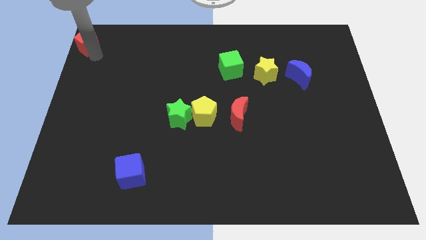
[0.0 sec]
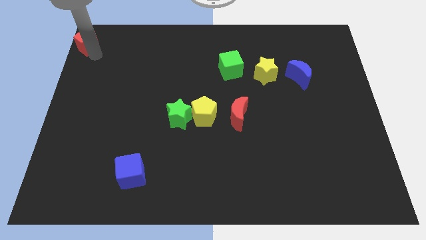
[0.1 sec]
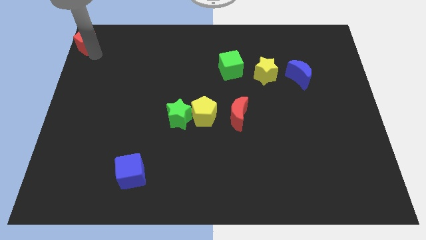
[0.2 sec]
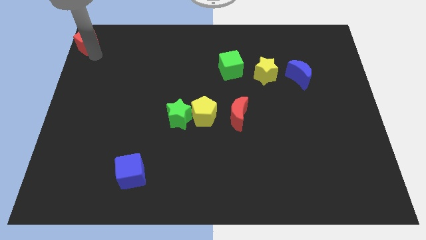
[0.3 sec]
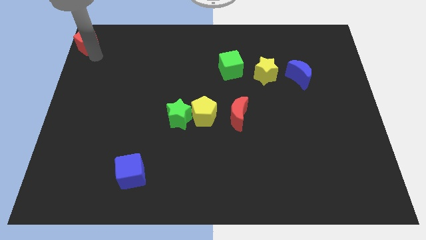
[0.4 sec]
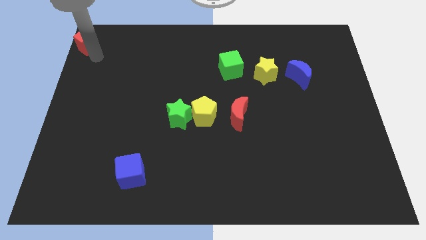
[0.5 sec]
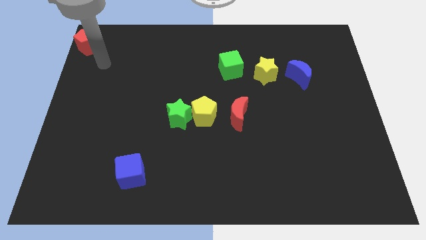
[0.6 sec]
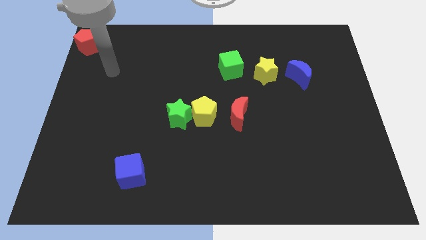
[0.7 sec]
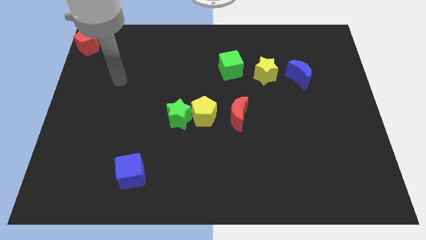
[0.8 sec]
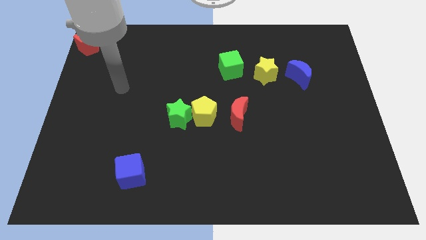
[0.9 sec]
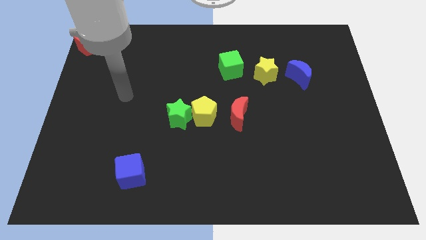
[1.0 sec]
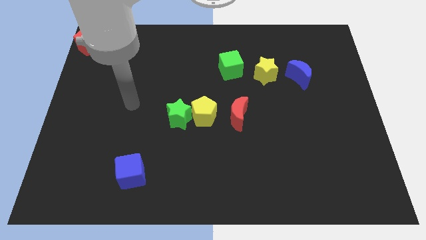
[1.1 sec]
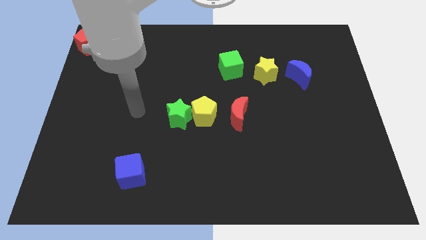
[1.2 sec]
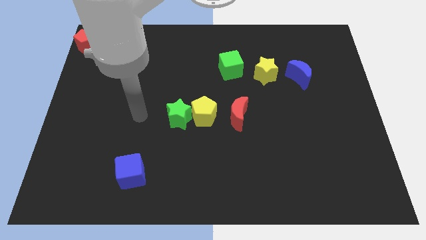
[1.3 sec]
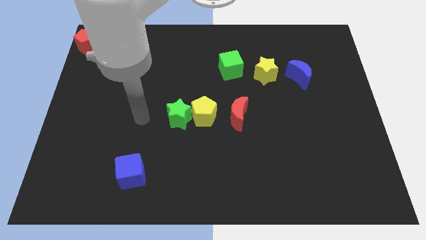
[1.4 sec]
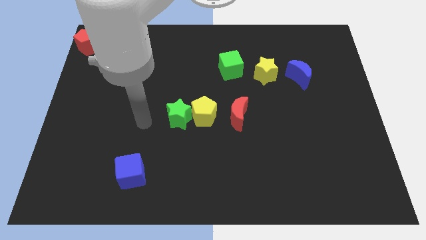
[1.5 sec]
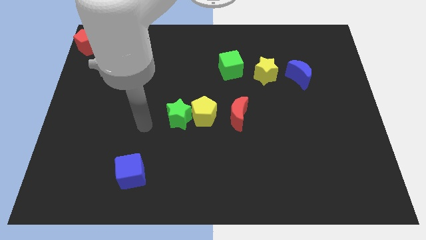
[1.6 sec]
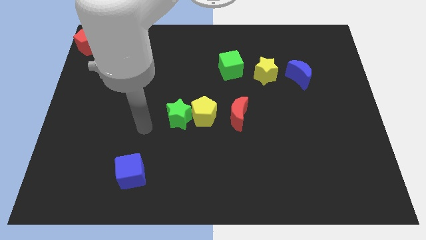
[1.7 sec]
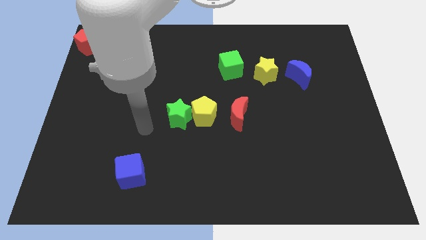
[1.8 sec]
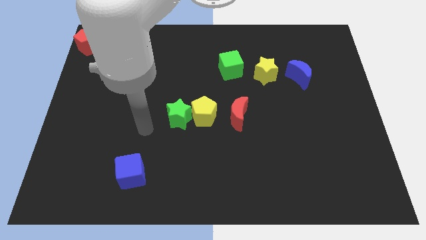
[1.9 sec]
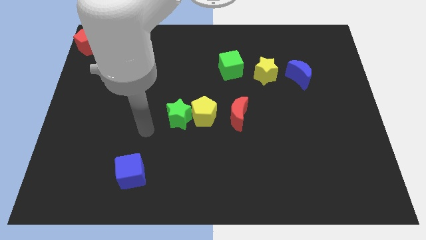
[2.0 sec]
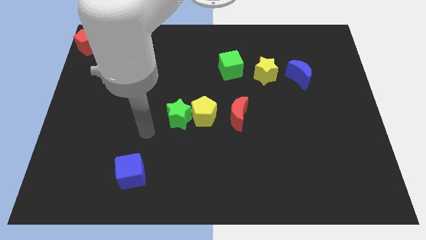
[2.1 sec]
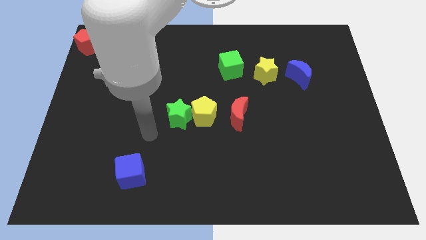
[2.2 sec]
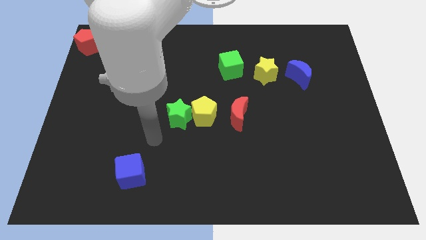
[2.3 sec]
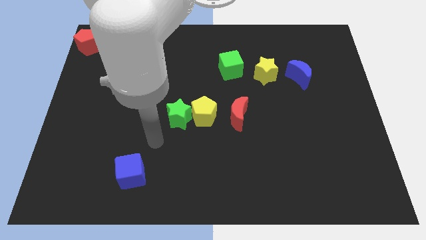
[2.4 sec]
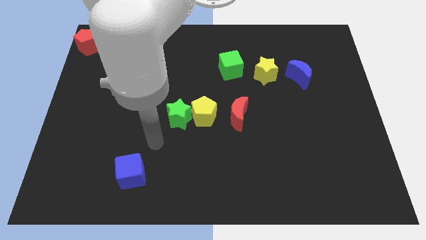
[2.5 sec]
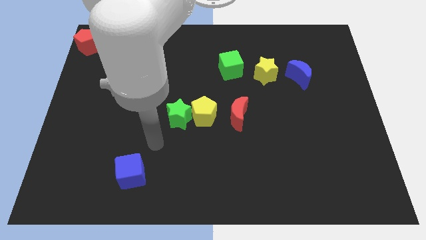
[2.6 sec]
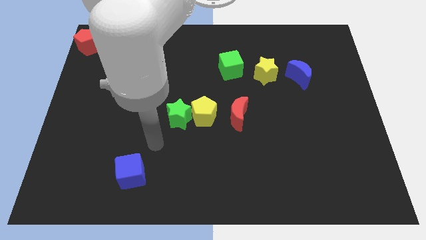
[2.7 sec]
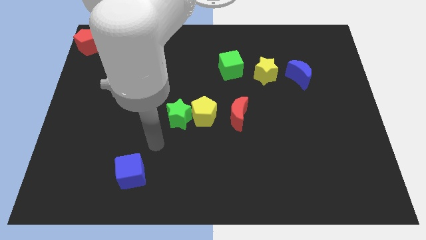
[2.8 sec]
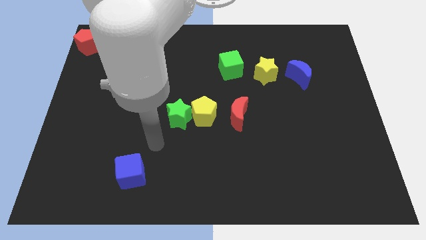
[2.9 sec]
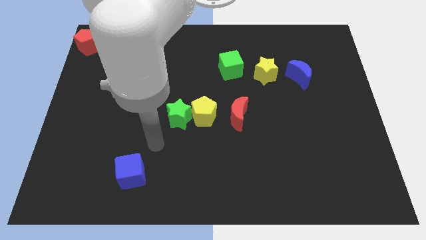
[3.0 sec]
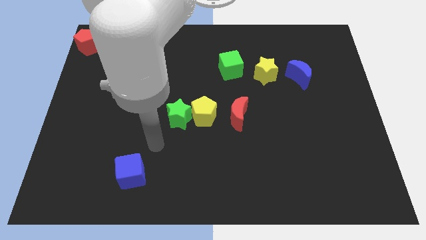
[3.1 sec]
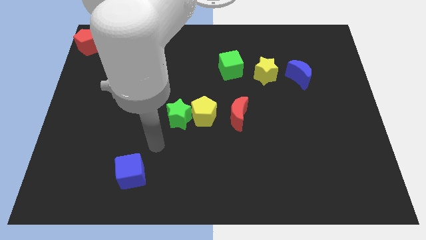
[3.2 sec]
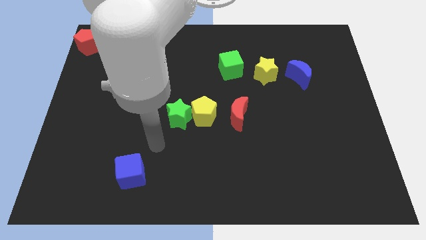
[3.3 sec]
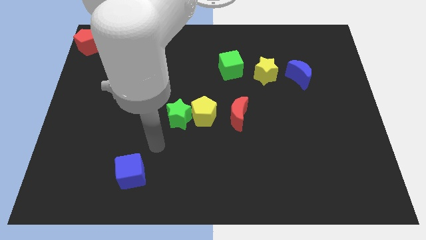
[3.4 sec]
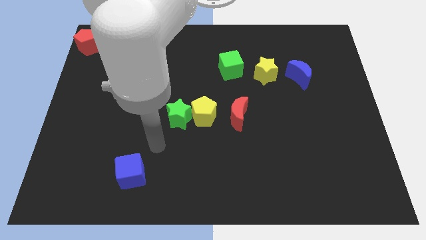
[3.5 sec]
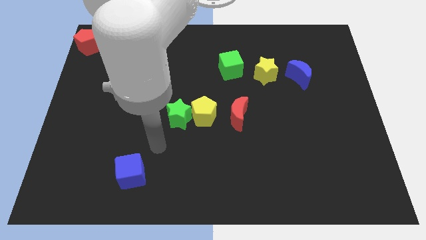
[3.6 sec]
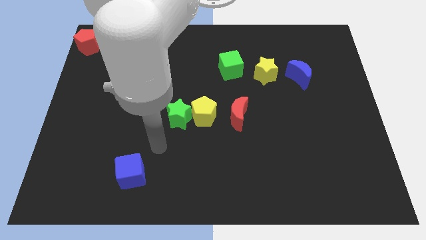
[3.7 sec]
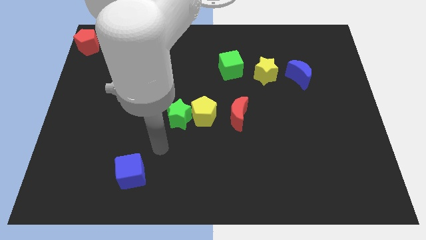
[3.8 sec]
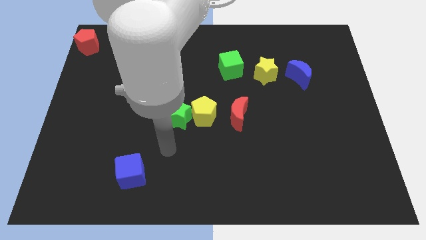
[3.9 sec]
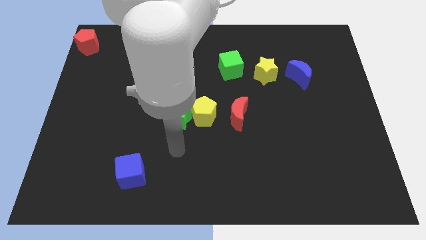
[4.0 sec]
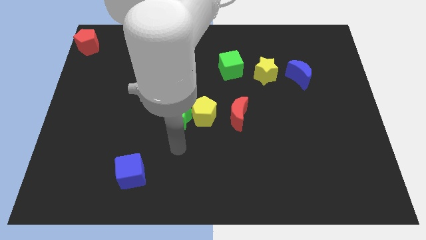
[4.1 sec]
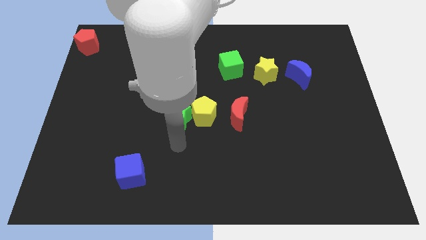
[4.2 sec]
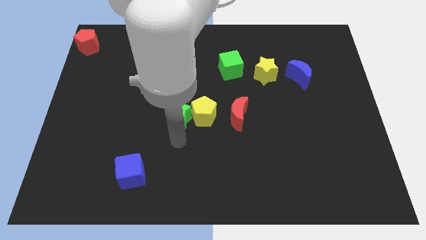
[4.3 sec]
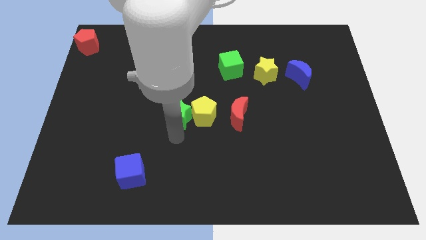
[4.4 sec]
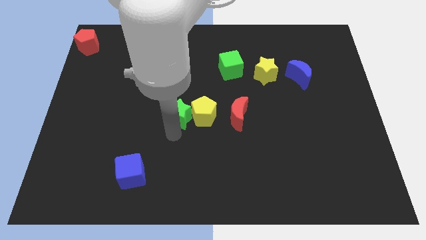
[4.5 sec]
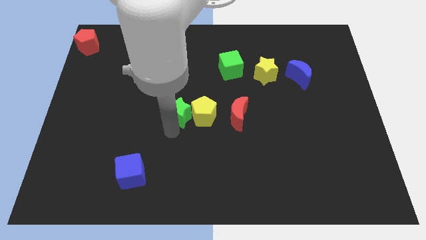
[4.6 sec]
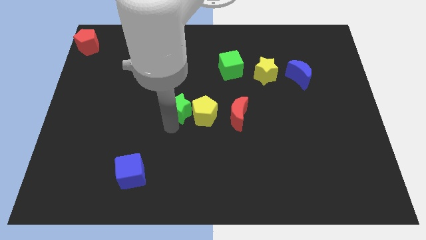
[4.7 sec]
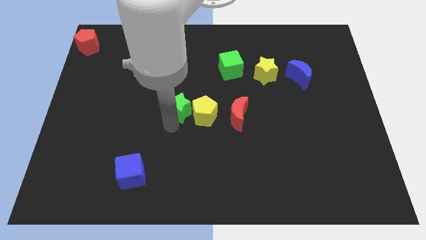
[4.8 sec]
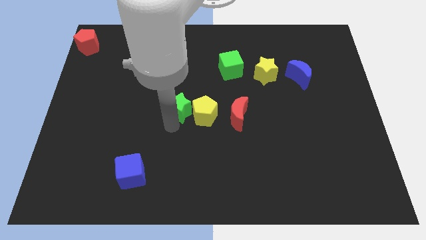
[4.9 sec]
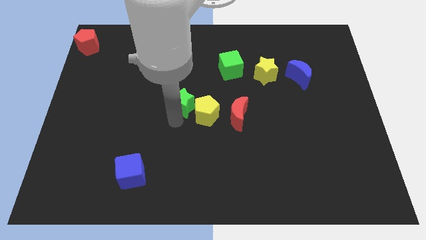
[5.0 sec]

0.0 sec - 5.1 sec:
push the green star slightly top

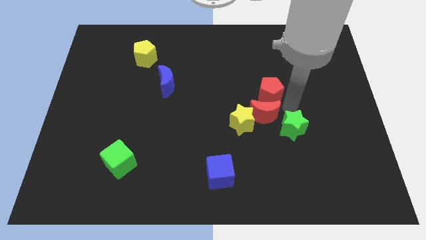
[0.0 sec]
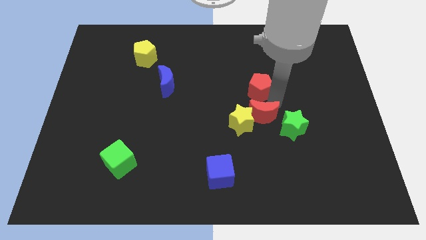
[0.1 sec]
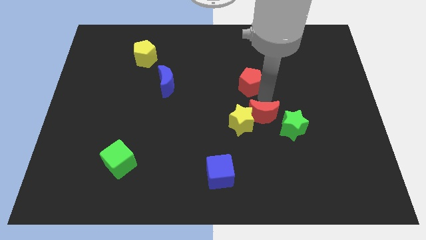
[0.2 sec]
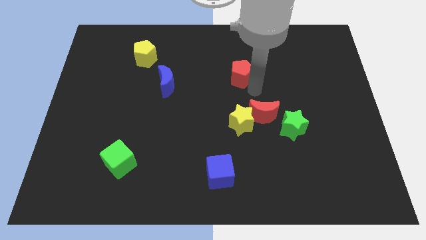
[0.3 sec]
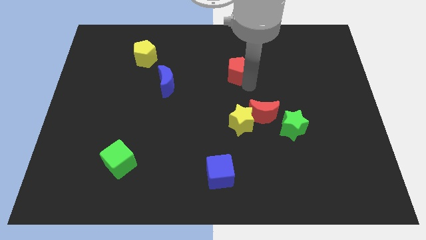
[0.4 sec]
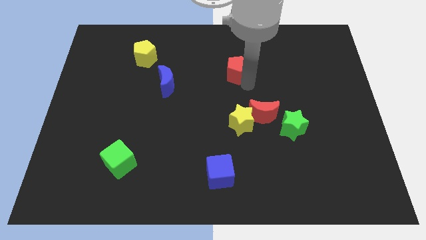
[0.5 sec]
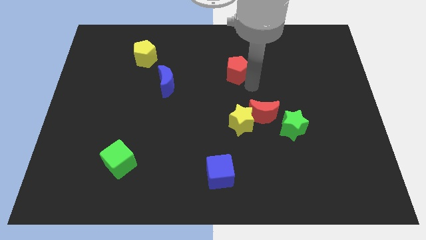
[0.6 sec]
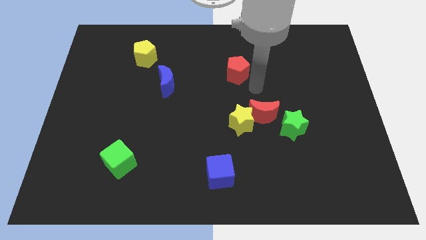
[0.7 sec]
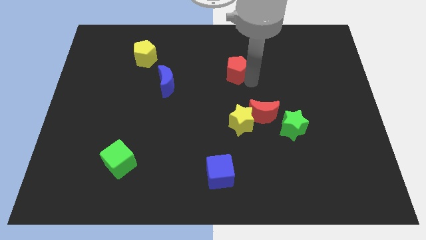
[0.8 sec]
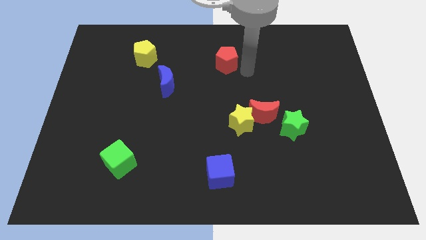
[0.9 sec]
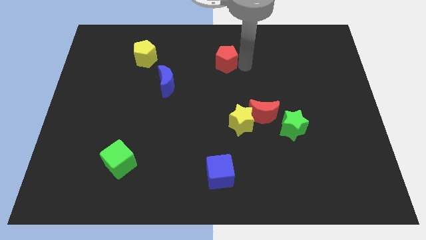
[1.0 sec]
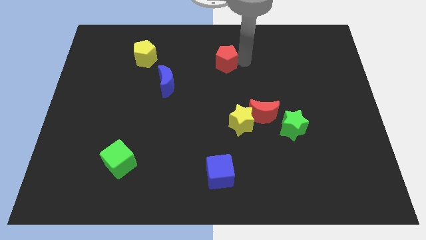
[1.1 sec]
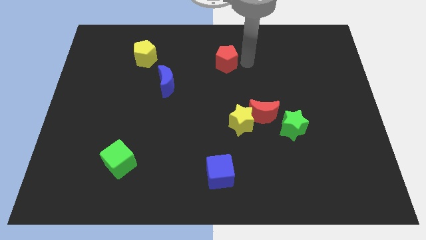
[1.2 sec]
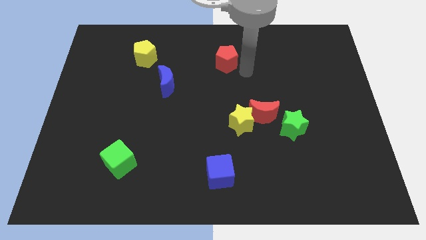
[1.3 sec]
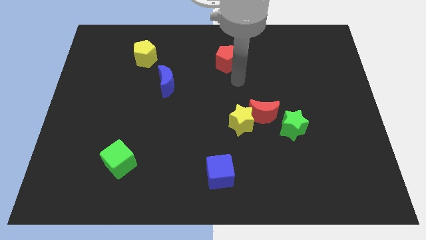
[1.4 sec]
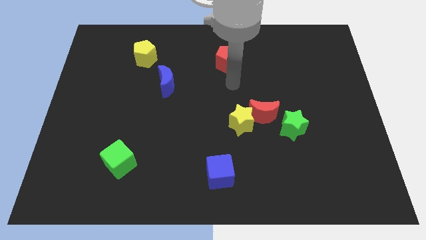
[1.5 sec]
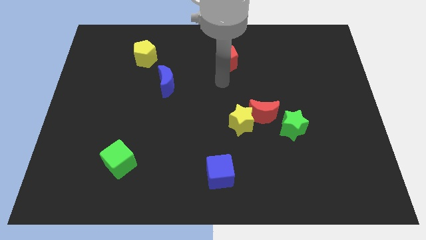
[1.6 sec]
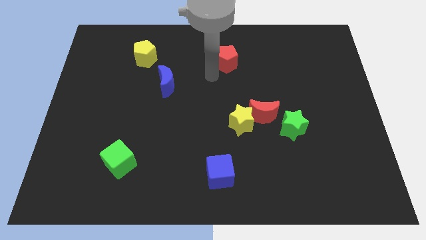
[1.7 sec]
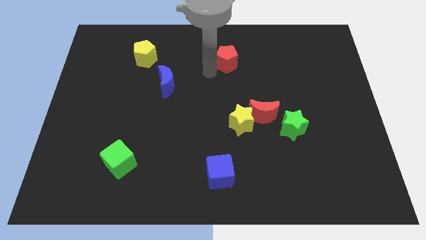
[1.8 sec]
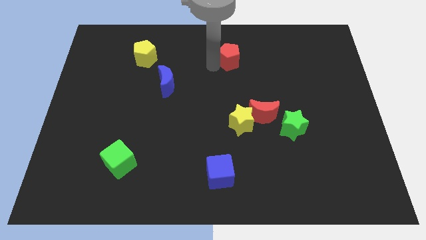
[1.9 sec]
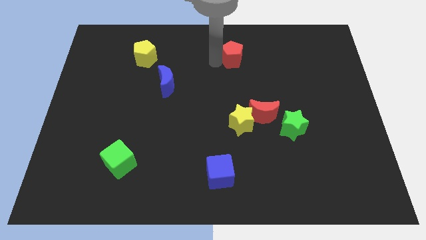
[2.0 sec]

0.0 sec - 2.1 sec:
move the red pentagon towards the top center side of the board

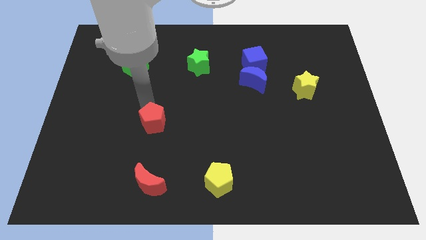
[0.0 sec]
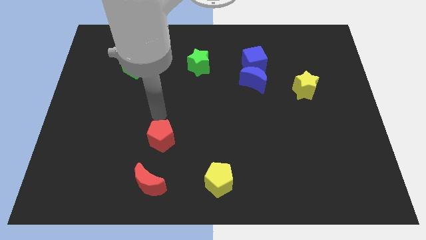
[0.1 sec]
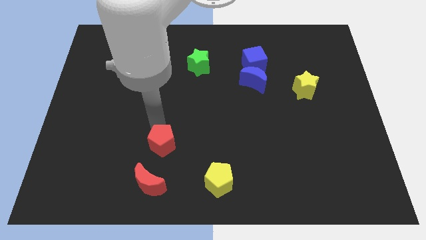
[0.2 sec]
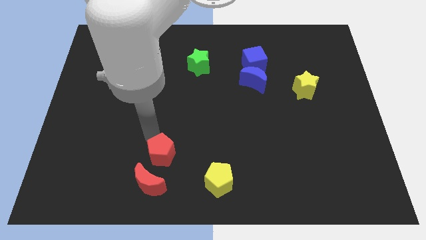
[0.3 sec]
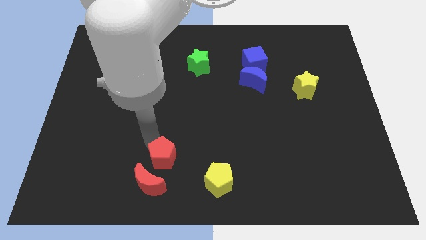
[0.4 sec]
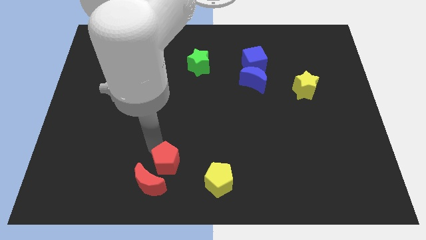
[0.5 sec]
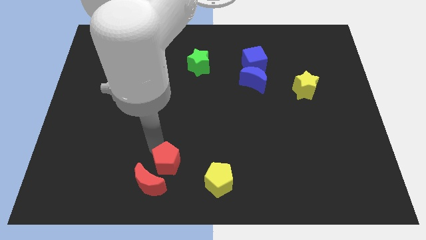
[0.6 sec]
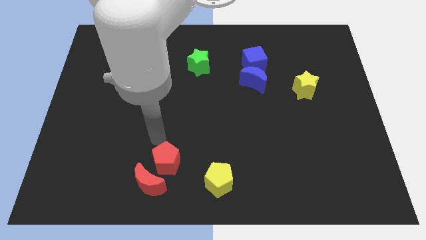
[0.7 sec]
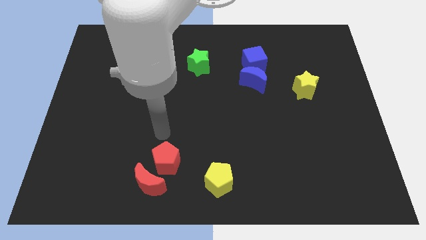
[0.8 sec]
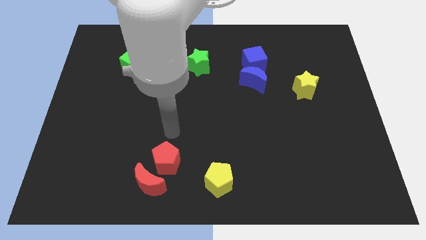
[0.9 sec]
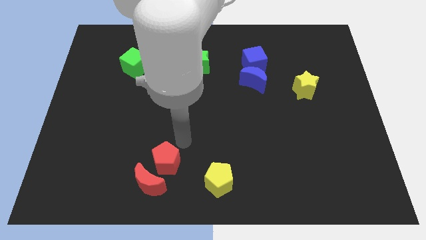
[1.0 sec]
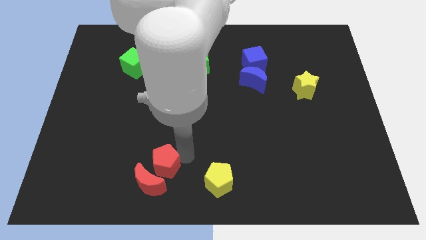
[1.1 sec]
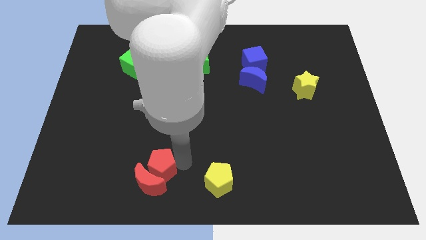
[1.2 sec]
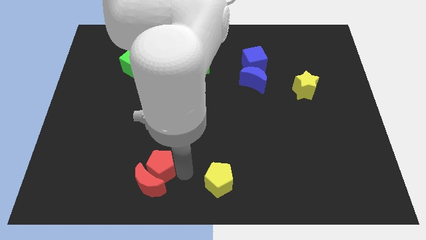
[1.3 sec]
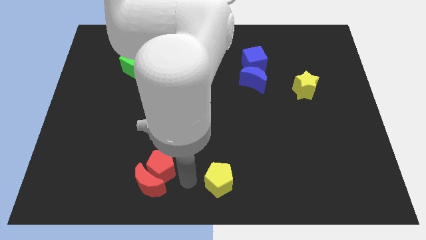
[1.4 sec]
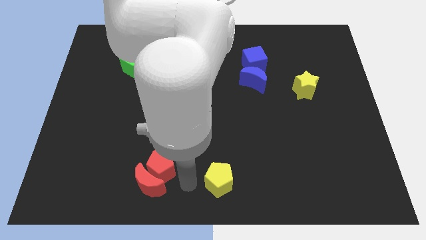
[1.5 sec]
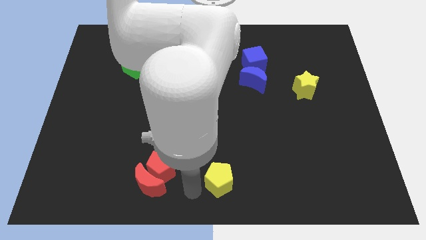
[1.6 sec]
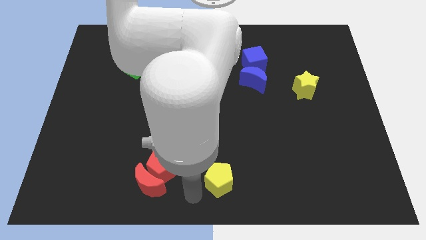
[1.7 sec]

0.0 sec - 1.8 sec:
push the red pentagon into the red moon
